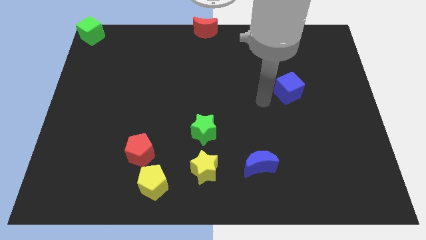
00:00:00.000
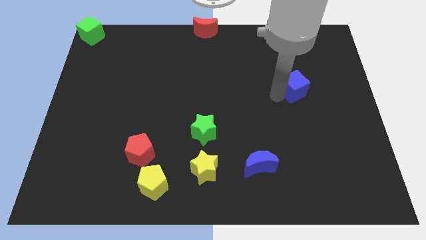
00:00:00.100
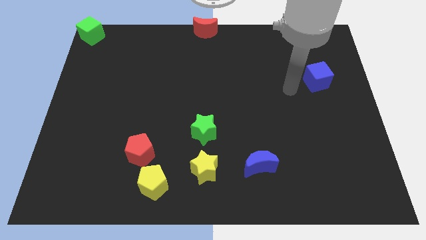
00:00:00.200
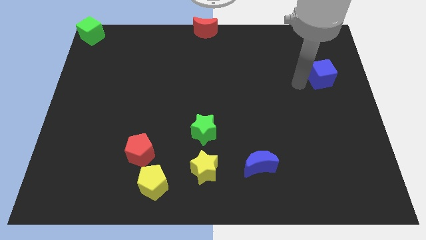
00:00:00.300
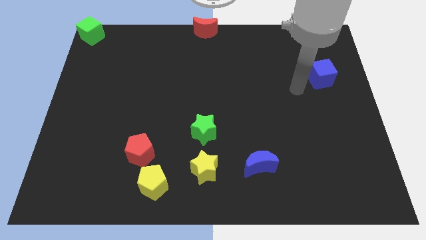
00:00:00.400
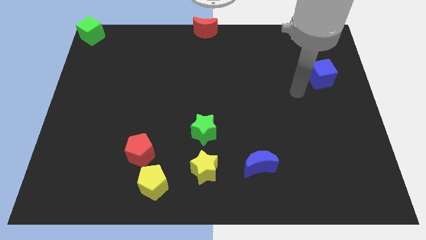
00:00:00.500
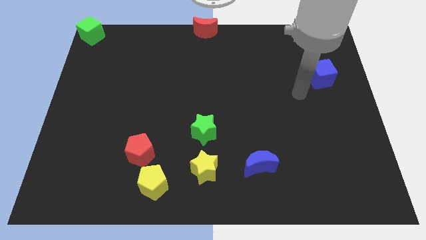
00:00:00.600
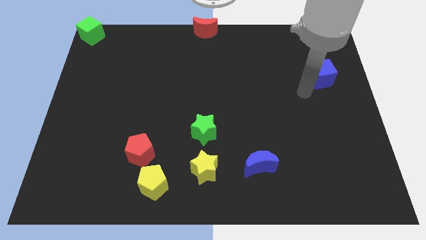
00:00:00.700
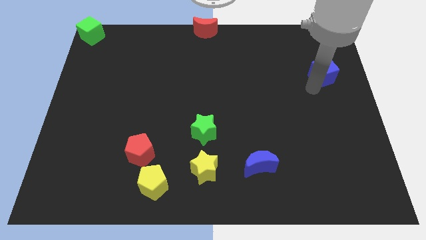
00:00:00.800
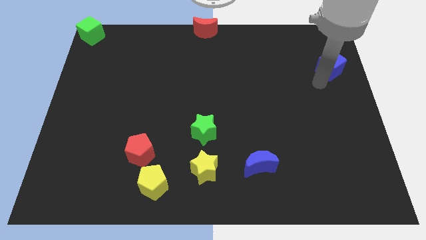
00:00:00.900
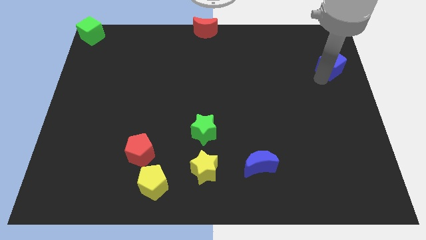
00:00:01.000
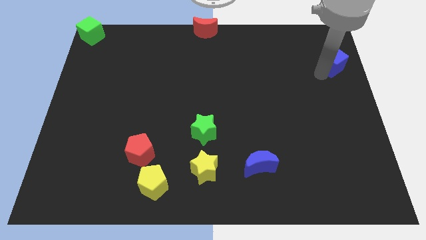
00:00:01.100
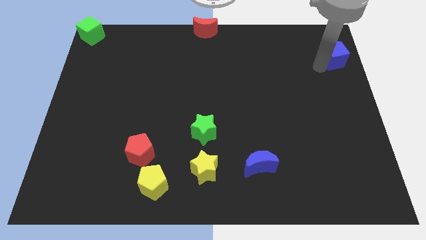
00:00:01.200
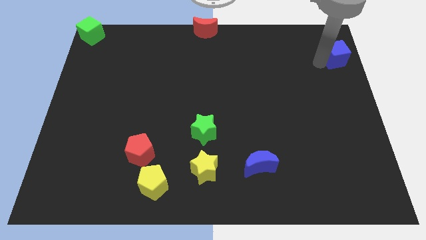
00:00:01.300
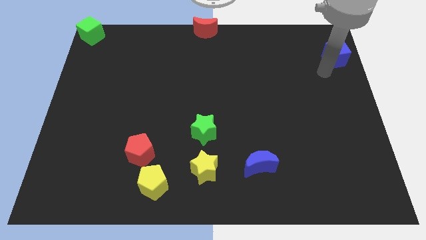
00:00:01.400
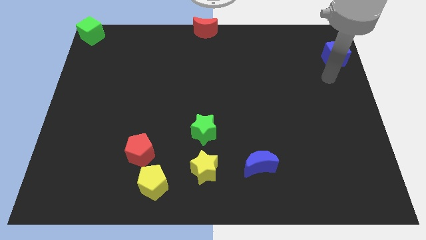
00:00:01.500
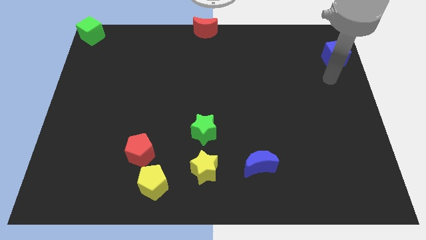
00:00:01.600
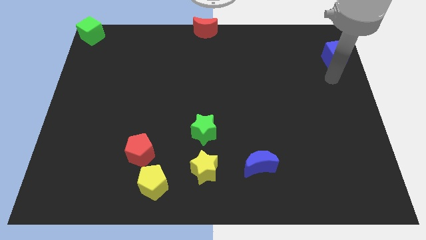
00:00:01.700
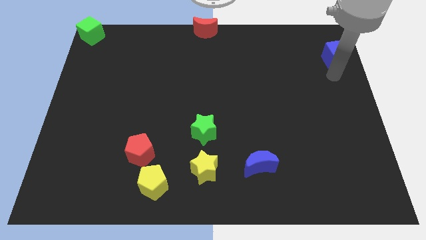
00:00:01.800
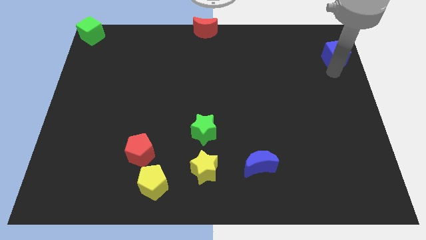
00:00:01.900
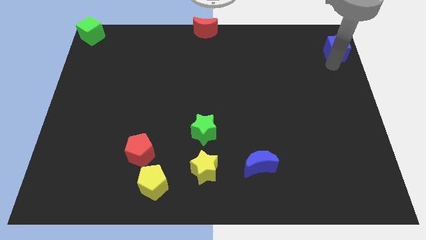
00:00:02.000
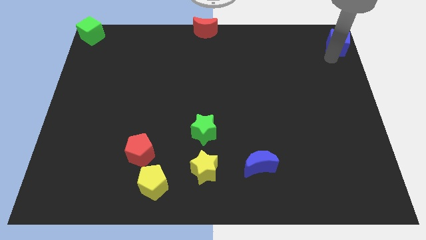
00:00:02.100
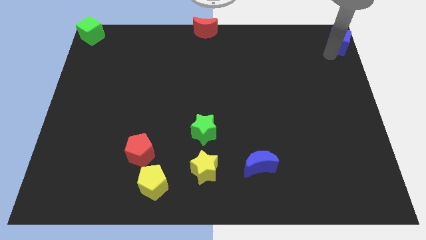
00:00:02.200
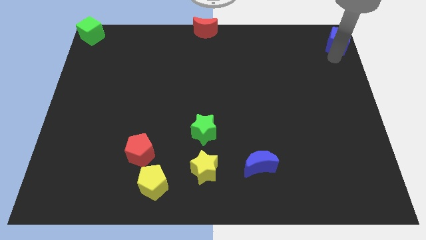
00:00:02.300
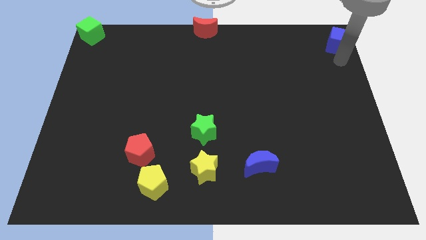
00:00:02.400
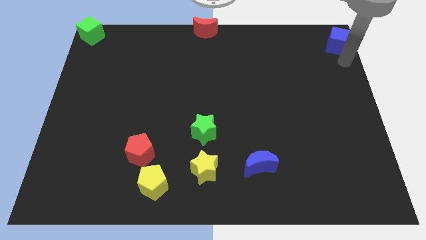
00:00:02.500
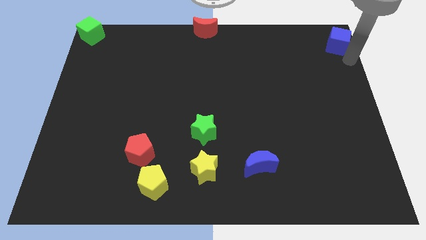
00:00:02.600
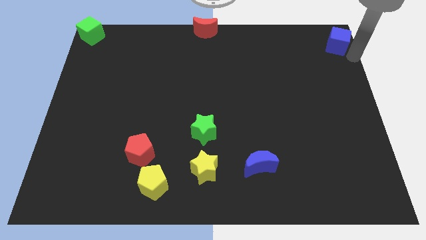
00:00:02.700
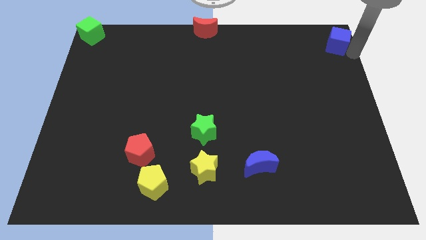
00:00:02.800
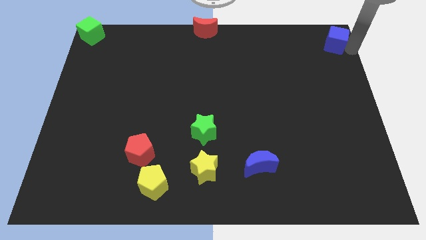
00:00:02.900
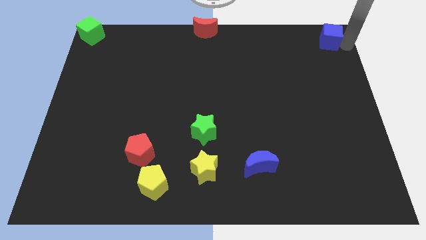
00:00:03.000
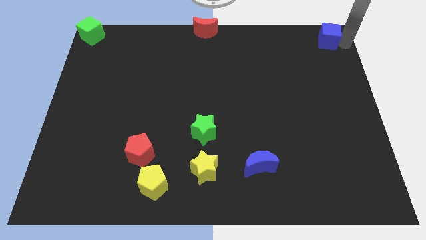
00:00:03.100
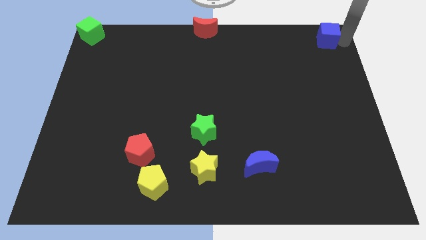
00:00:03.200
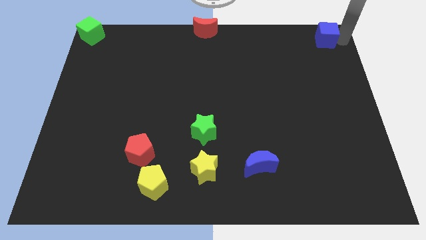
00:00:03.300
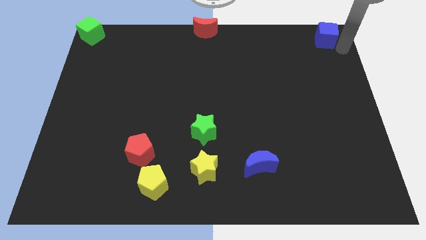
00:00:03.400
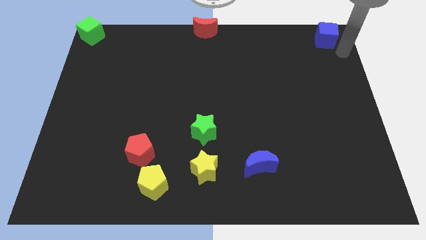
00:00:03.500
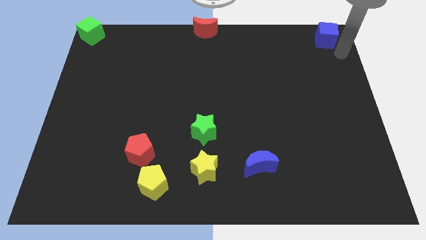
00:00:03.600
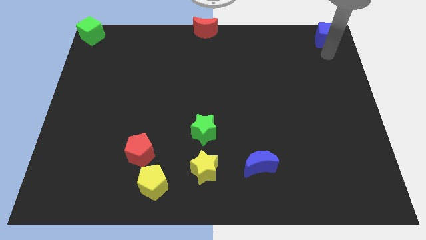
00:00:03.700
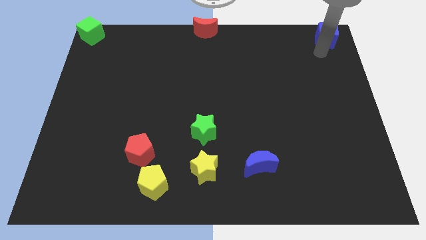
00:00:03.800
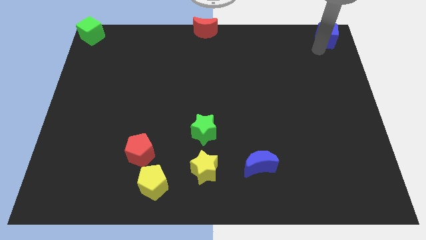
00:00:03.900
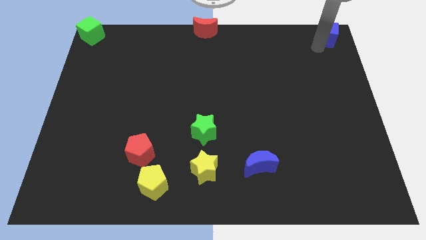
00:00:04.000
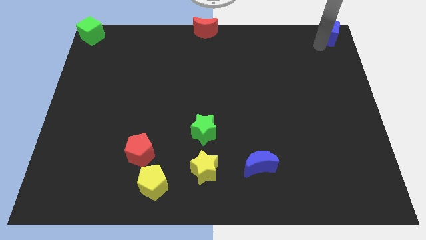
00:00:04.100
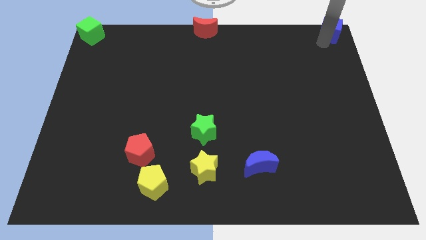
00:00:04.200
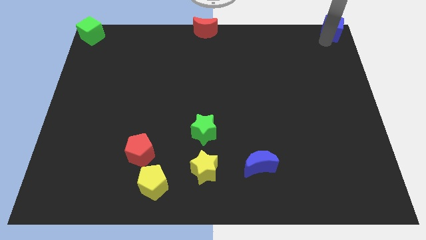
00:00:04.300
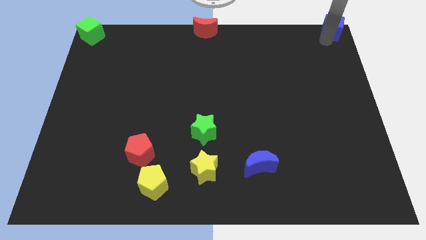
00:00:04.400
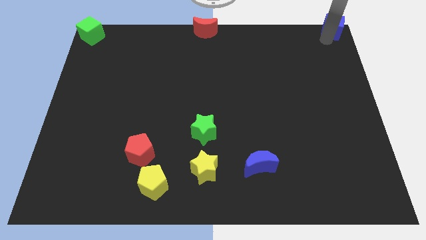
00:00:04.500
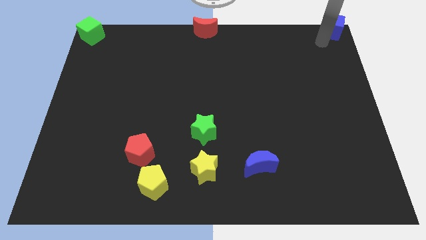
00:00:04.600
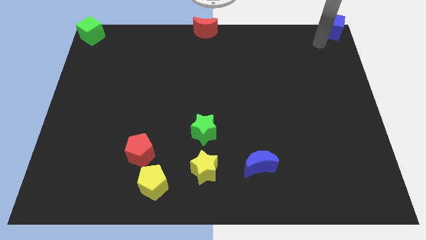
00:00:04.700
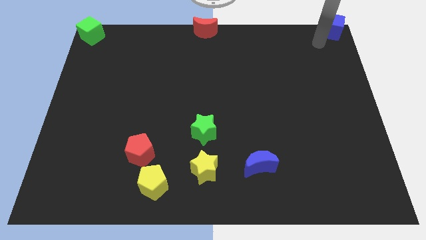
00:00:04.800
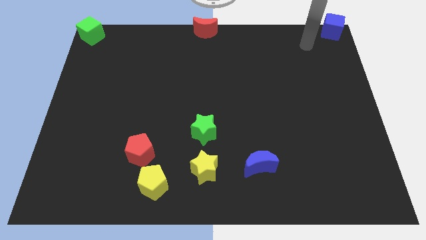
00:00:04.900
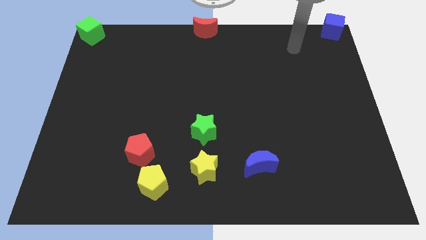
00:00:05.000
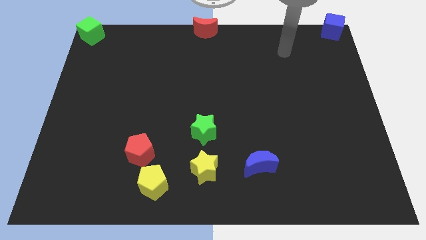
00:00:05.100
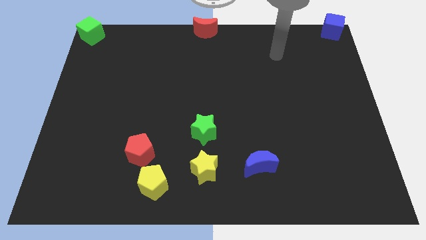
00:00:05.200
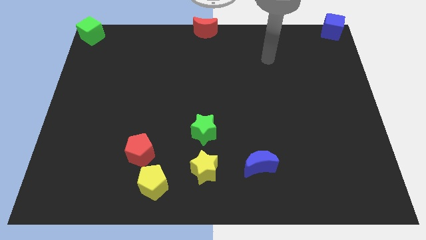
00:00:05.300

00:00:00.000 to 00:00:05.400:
put the blue cube at the top right corner

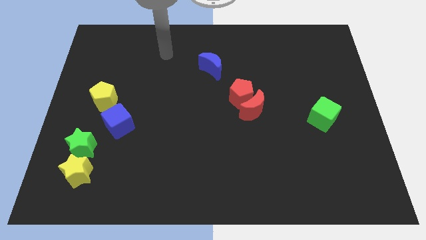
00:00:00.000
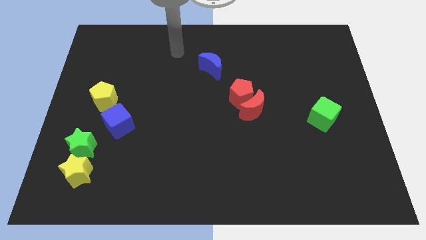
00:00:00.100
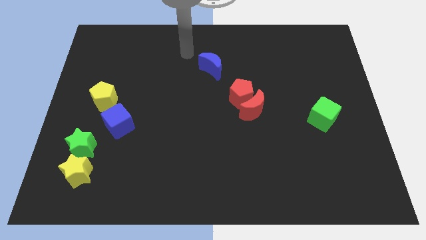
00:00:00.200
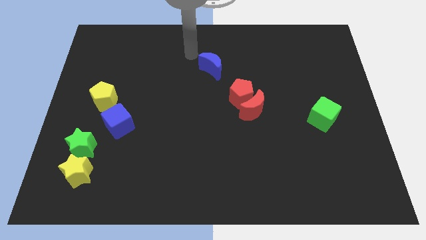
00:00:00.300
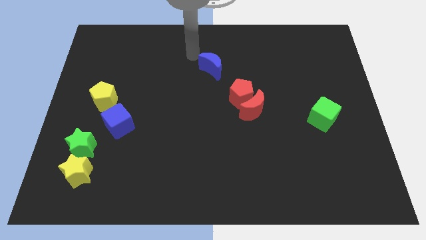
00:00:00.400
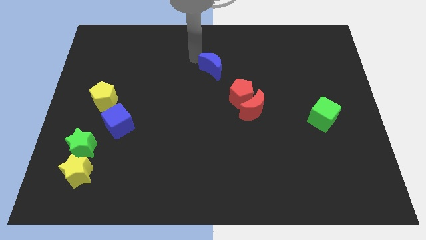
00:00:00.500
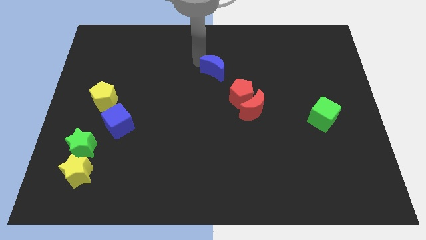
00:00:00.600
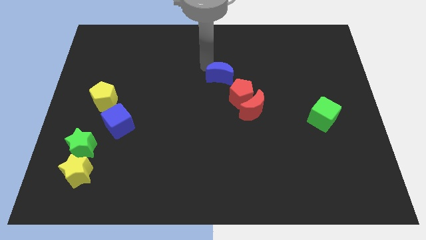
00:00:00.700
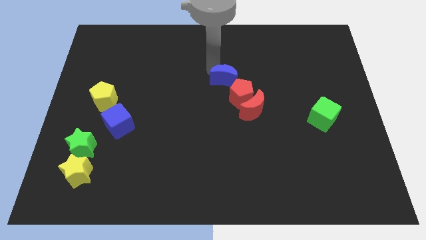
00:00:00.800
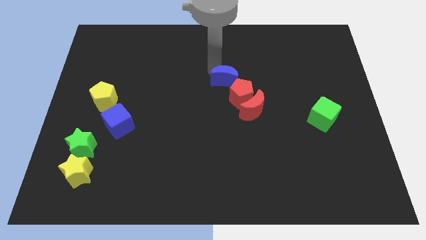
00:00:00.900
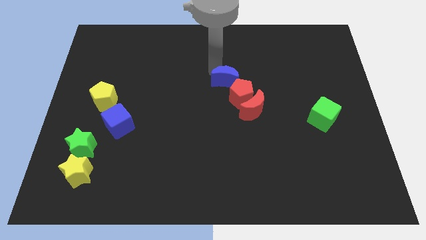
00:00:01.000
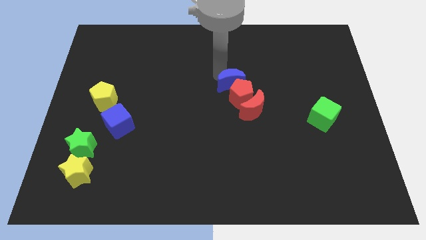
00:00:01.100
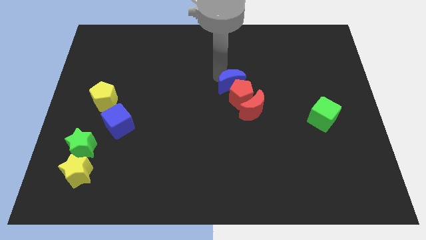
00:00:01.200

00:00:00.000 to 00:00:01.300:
move the blue crescent to the top of the red pentagon

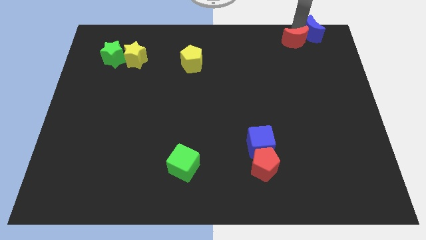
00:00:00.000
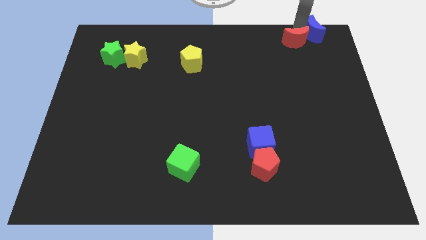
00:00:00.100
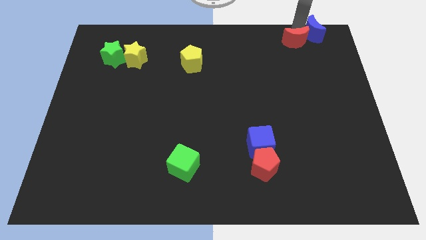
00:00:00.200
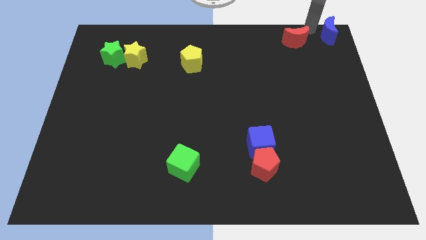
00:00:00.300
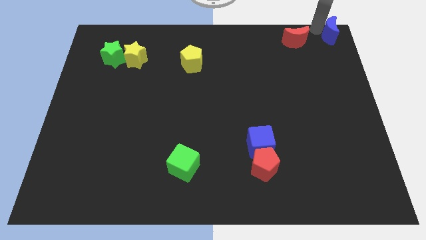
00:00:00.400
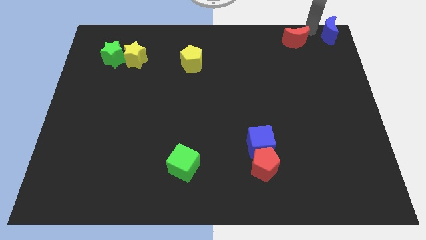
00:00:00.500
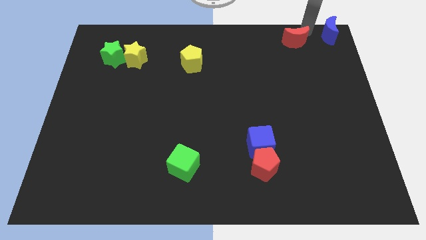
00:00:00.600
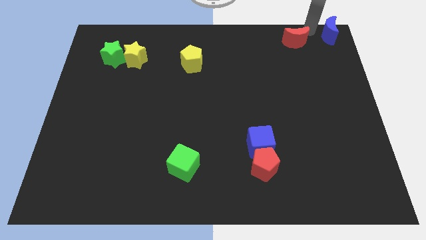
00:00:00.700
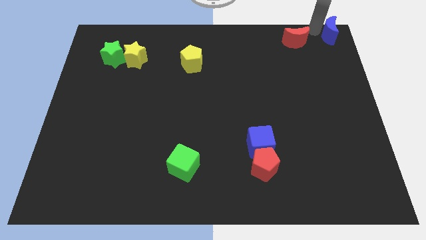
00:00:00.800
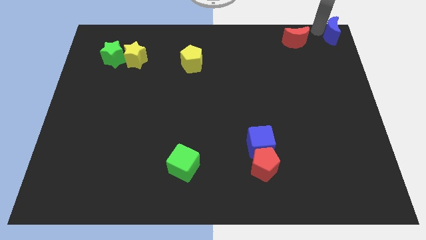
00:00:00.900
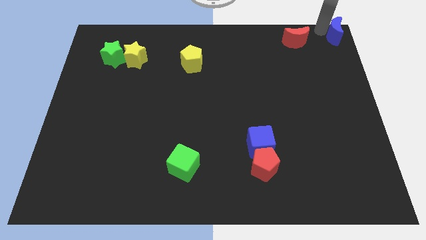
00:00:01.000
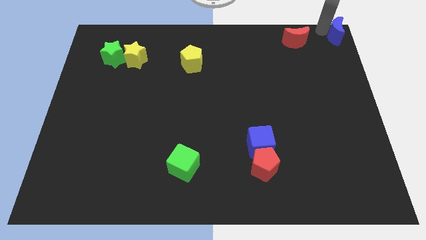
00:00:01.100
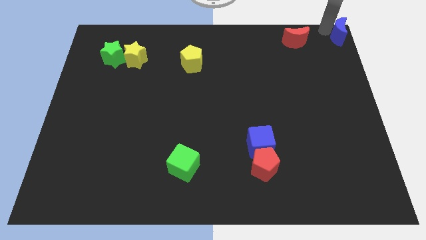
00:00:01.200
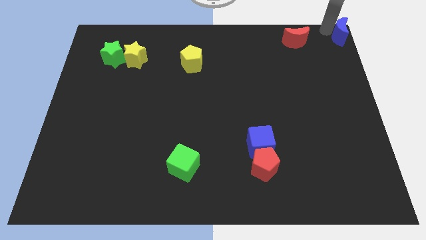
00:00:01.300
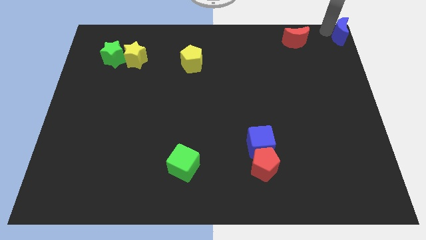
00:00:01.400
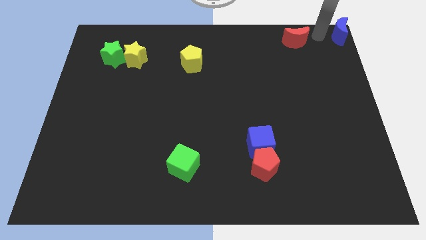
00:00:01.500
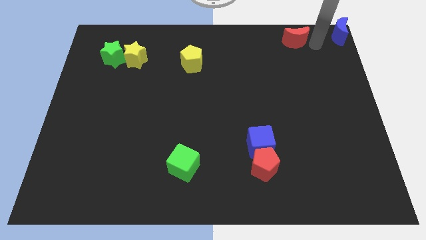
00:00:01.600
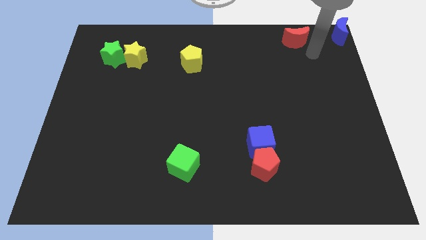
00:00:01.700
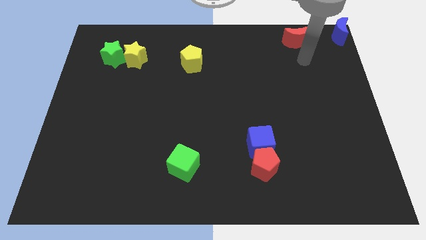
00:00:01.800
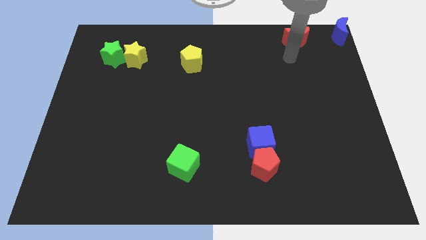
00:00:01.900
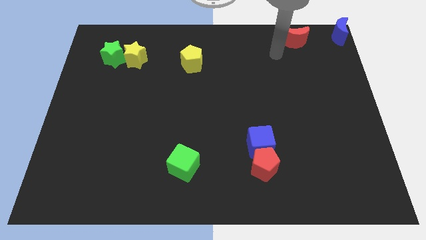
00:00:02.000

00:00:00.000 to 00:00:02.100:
slide blue moon to the top right

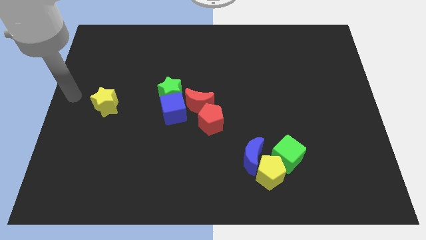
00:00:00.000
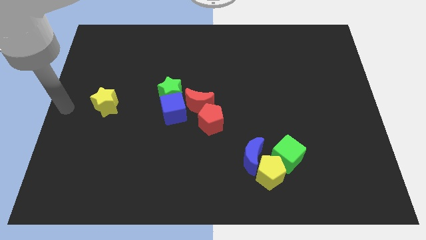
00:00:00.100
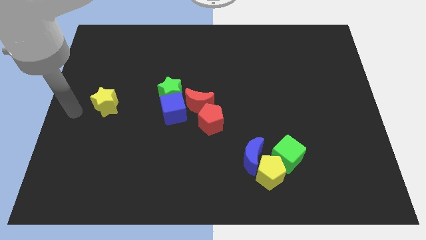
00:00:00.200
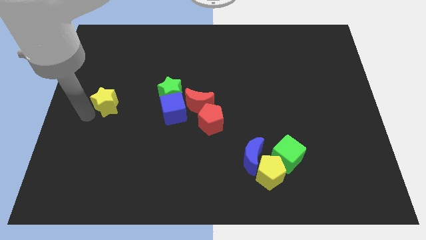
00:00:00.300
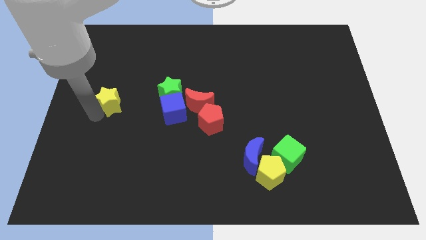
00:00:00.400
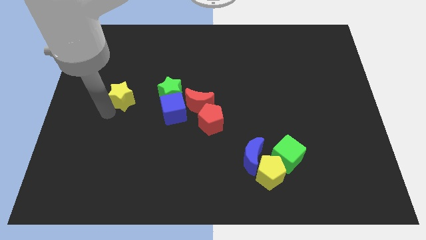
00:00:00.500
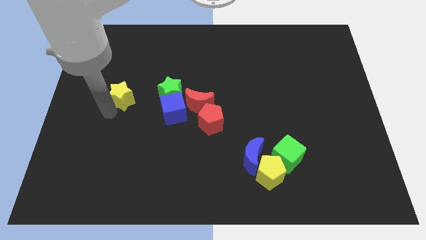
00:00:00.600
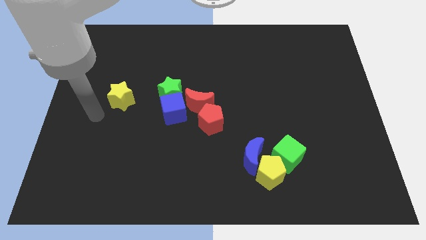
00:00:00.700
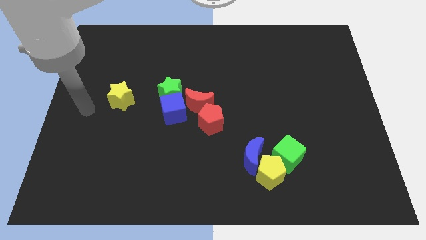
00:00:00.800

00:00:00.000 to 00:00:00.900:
push the yellow star to the right
